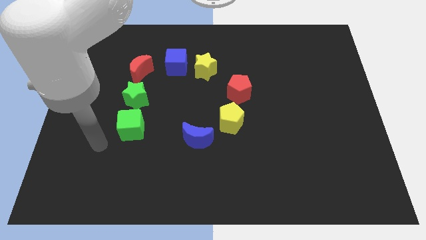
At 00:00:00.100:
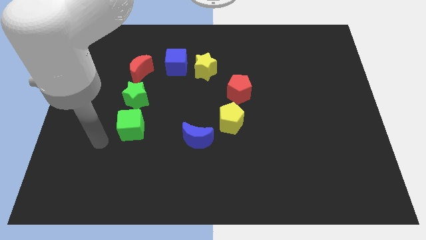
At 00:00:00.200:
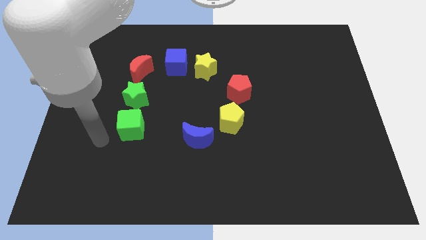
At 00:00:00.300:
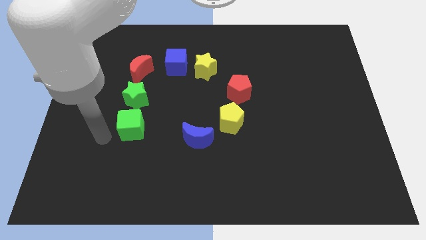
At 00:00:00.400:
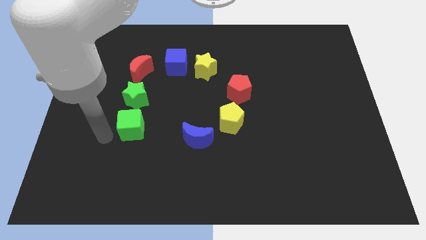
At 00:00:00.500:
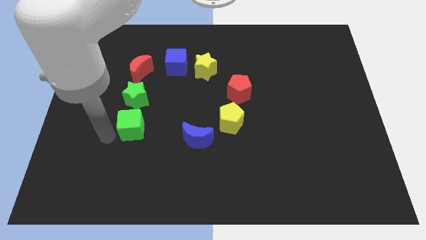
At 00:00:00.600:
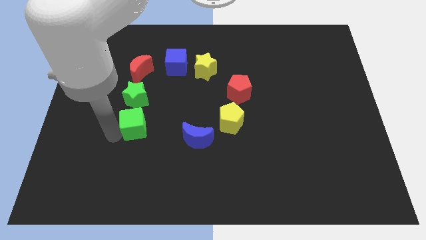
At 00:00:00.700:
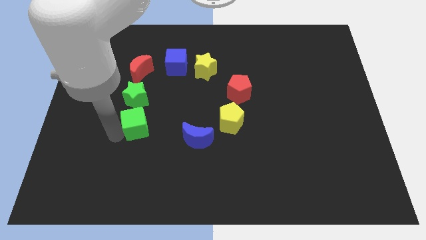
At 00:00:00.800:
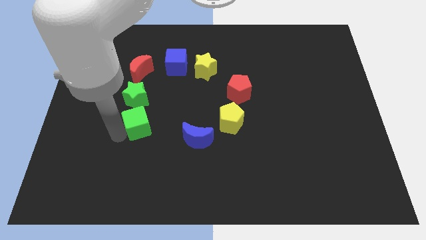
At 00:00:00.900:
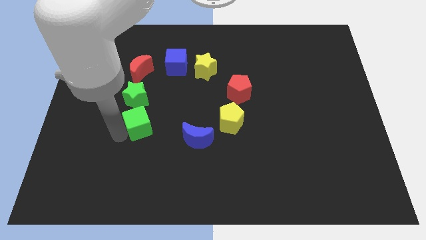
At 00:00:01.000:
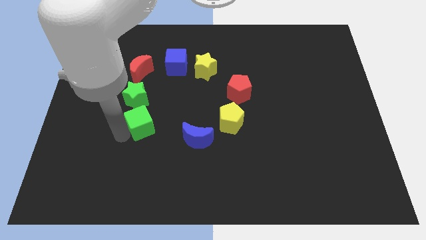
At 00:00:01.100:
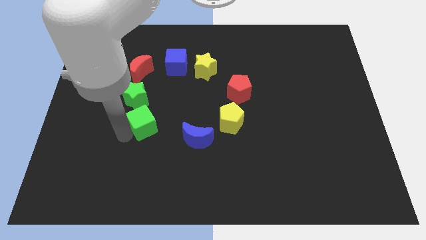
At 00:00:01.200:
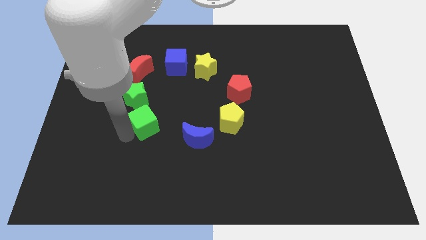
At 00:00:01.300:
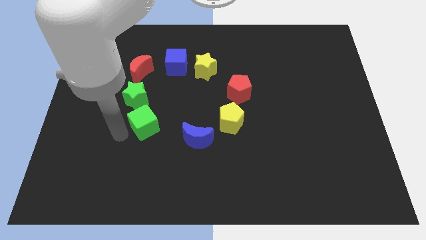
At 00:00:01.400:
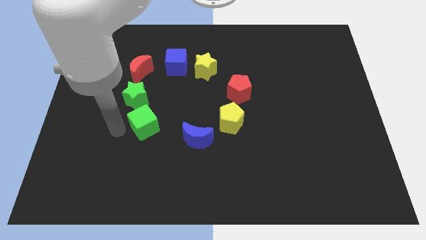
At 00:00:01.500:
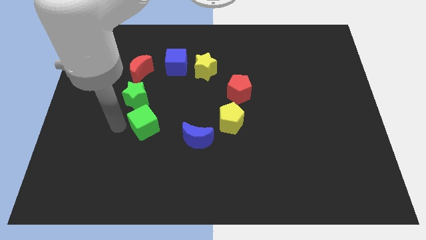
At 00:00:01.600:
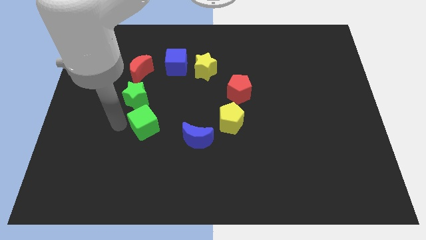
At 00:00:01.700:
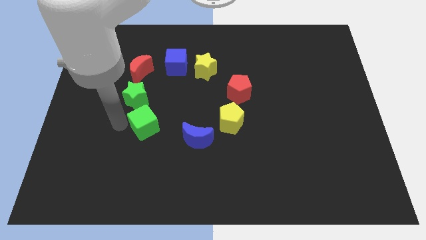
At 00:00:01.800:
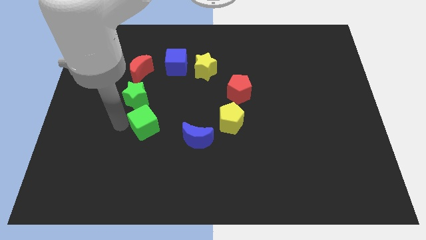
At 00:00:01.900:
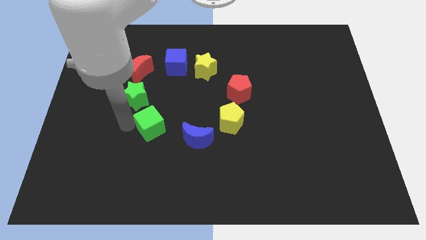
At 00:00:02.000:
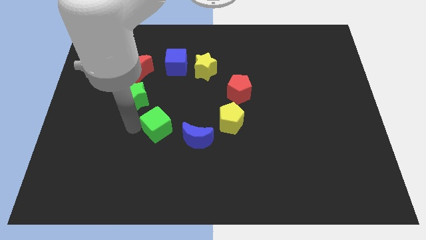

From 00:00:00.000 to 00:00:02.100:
make all the cubes in the form of circle

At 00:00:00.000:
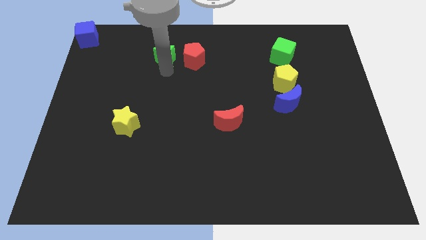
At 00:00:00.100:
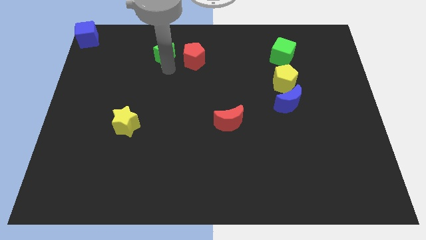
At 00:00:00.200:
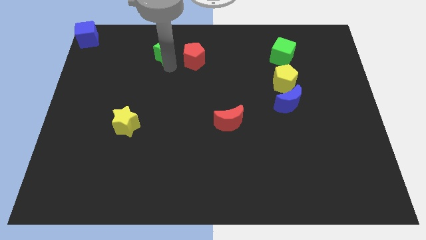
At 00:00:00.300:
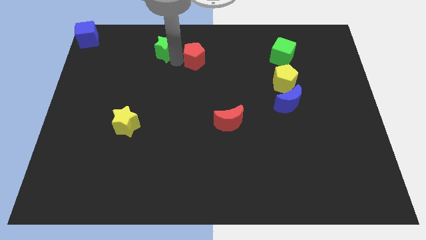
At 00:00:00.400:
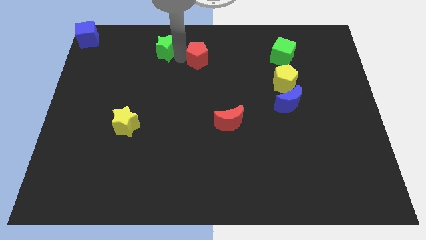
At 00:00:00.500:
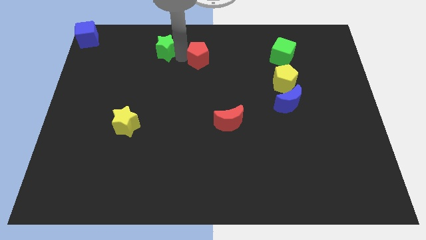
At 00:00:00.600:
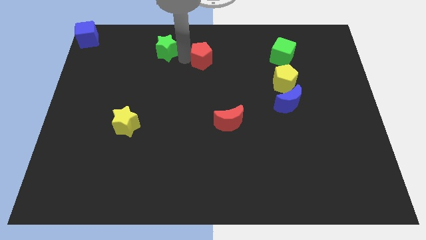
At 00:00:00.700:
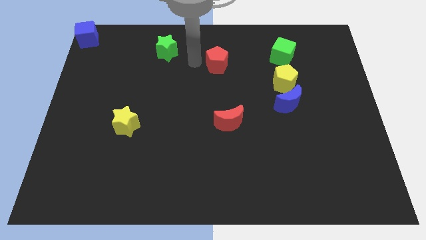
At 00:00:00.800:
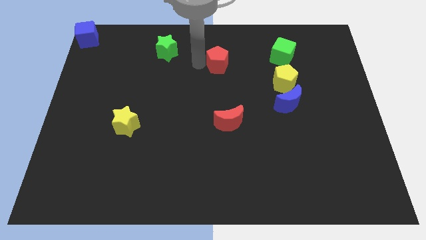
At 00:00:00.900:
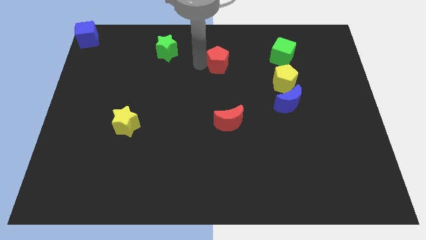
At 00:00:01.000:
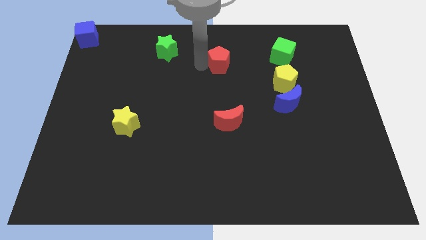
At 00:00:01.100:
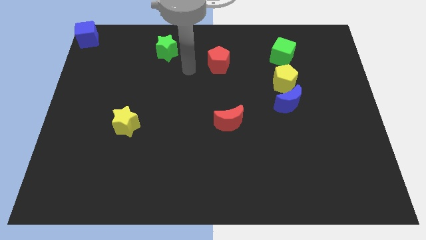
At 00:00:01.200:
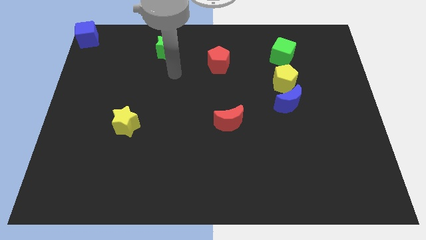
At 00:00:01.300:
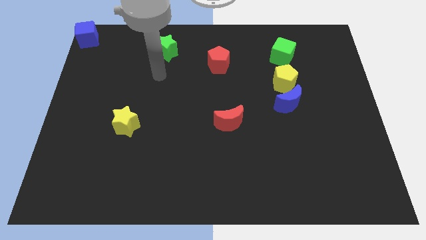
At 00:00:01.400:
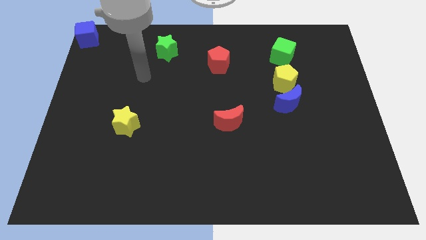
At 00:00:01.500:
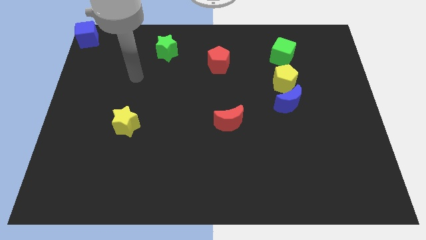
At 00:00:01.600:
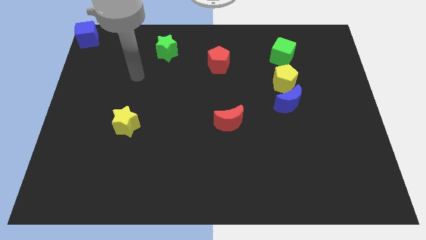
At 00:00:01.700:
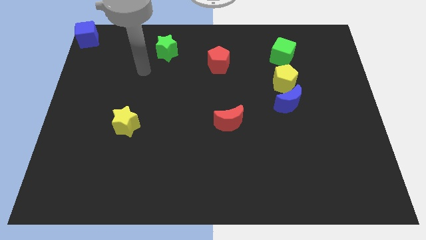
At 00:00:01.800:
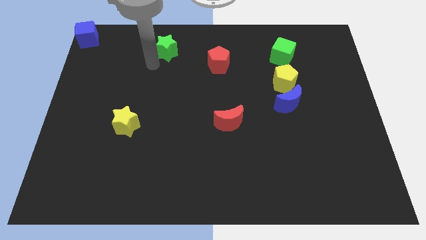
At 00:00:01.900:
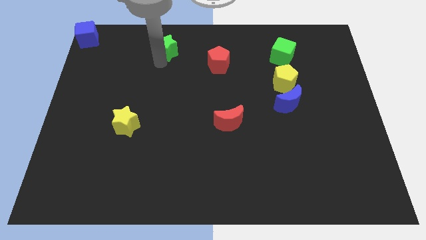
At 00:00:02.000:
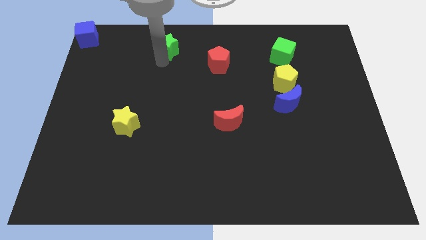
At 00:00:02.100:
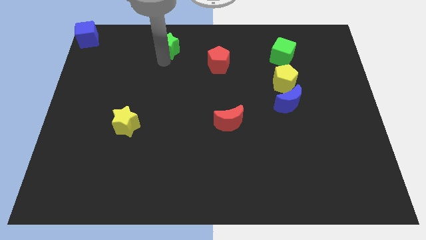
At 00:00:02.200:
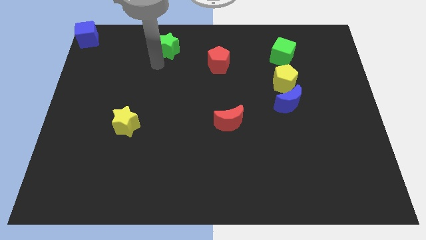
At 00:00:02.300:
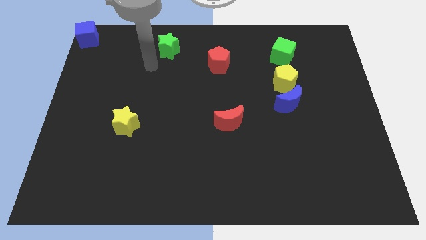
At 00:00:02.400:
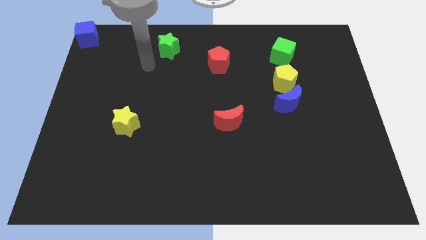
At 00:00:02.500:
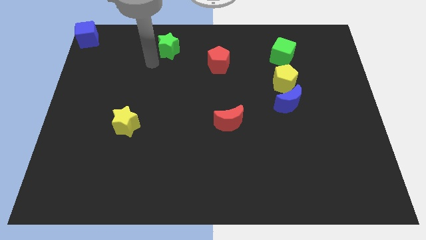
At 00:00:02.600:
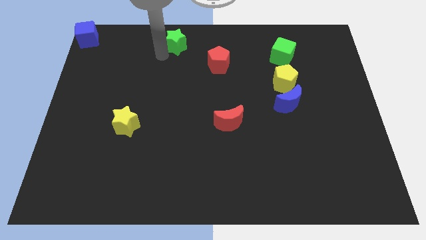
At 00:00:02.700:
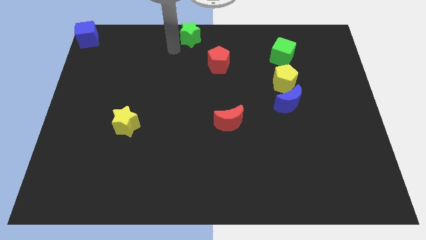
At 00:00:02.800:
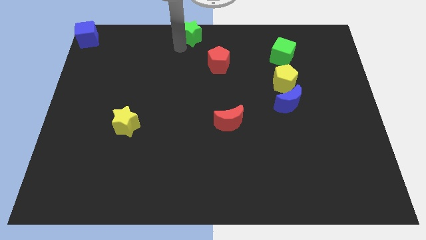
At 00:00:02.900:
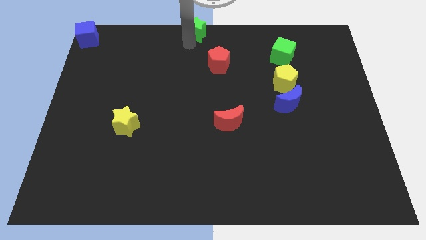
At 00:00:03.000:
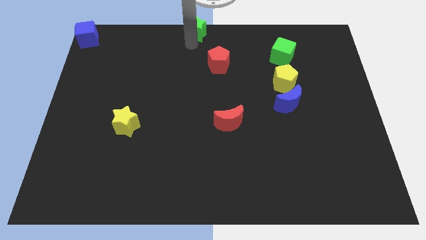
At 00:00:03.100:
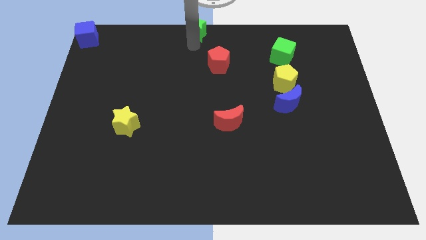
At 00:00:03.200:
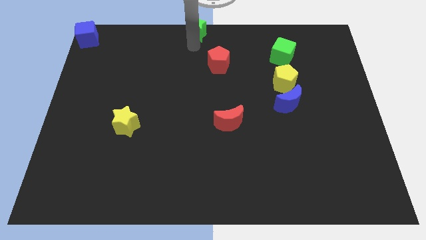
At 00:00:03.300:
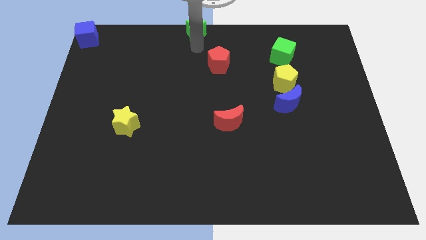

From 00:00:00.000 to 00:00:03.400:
slightly move the red pentagon left to the green cube

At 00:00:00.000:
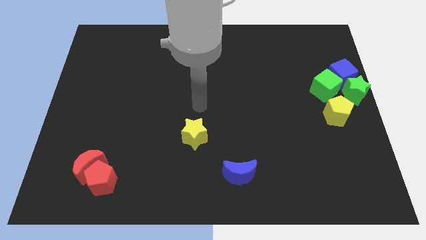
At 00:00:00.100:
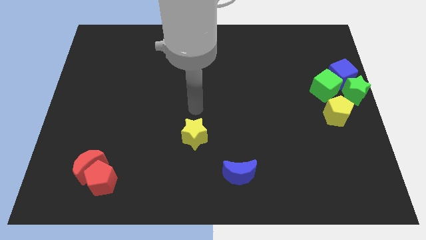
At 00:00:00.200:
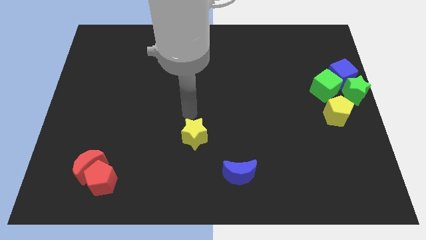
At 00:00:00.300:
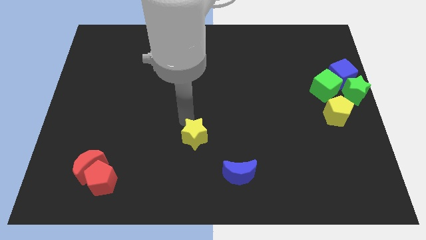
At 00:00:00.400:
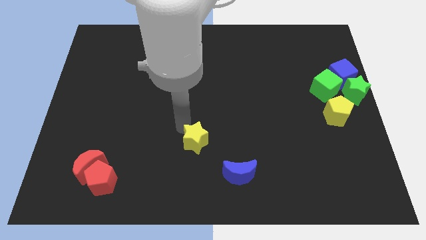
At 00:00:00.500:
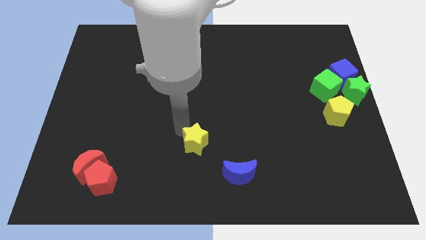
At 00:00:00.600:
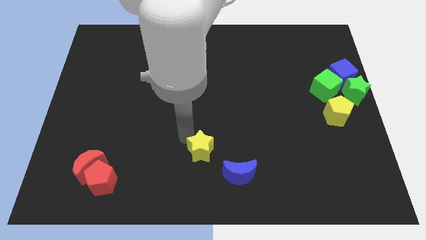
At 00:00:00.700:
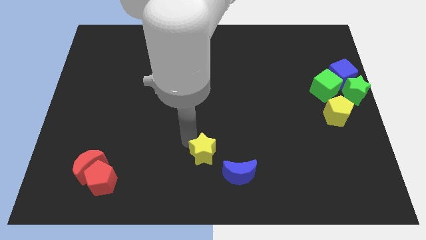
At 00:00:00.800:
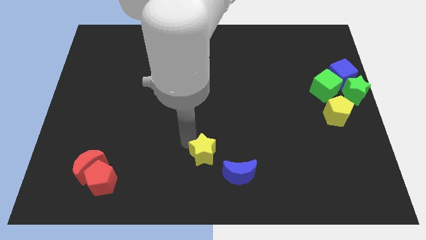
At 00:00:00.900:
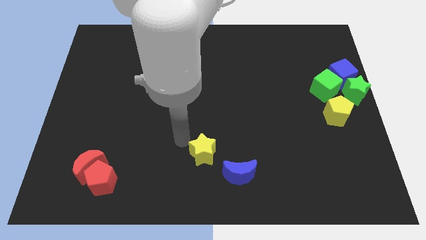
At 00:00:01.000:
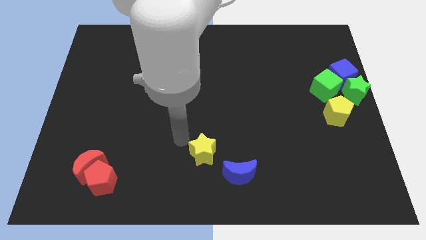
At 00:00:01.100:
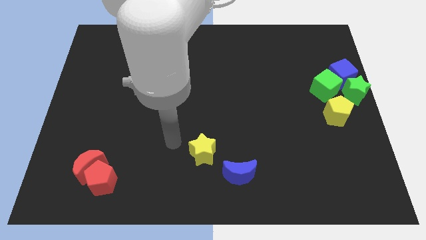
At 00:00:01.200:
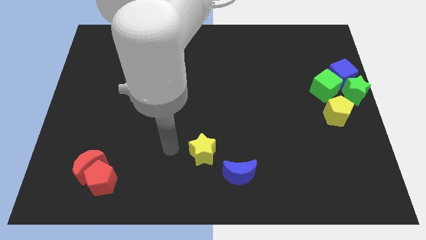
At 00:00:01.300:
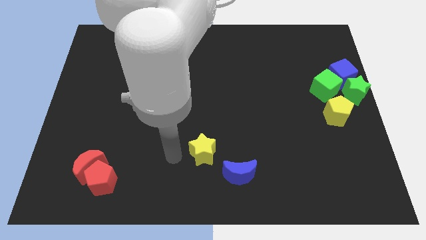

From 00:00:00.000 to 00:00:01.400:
place the yellow star in between the pentagons

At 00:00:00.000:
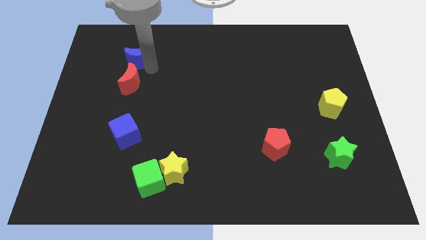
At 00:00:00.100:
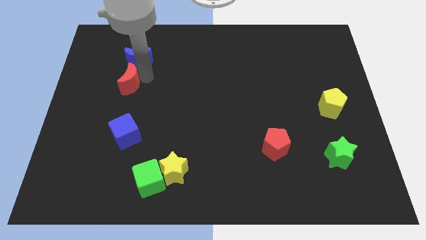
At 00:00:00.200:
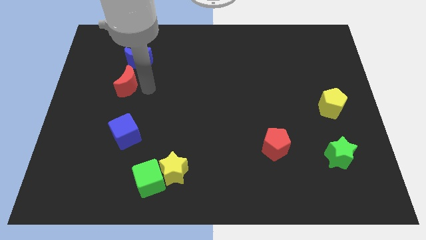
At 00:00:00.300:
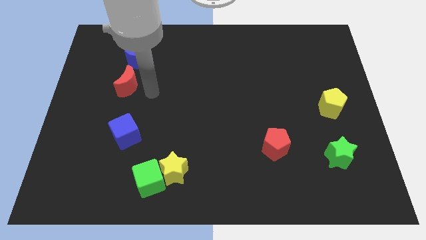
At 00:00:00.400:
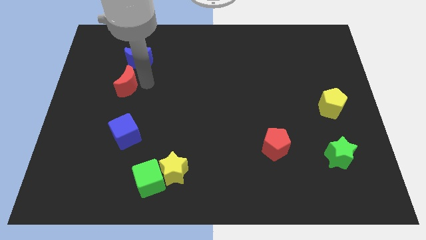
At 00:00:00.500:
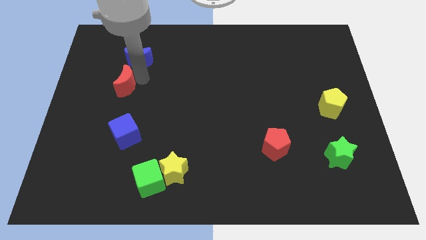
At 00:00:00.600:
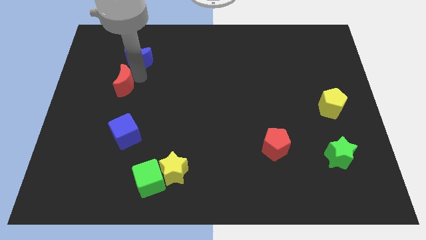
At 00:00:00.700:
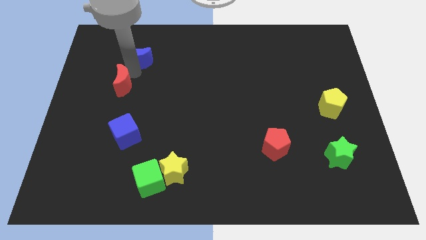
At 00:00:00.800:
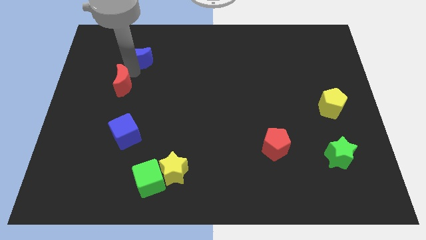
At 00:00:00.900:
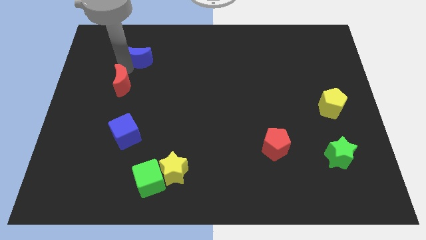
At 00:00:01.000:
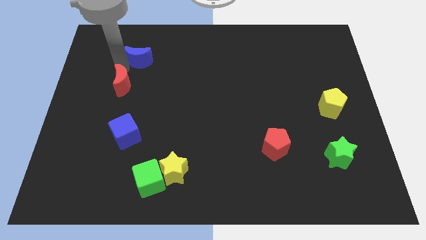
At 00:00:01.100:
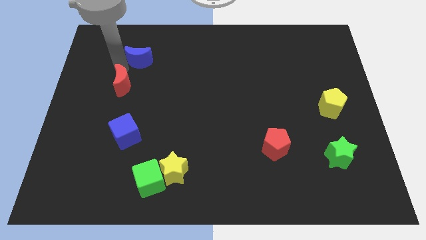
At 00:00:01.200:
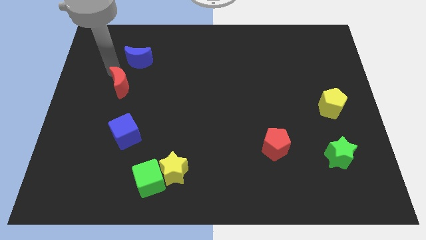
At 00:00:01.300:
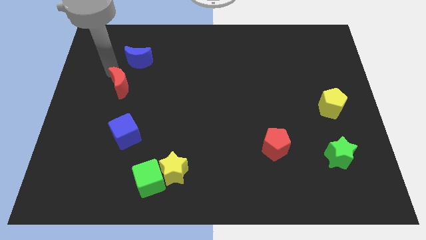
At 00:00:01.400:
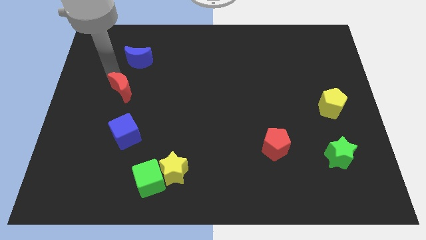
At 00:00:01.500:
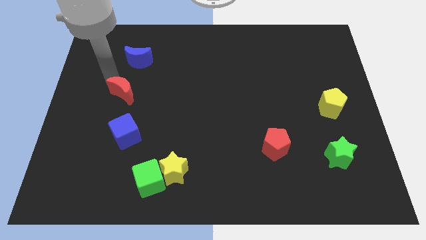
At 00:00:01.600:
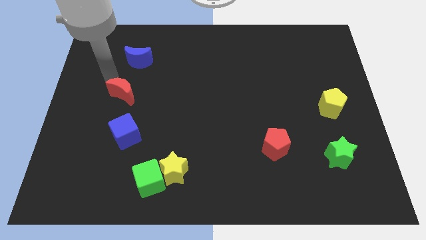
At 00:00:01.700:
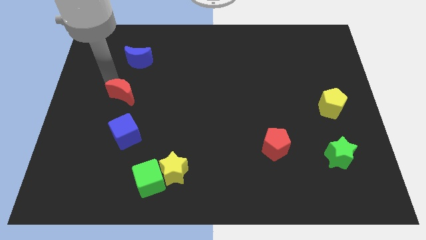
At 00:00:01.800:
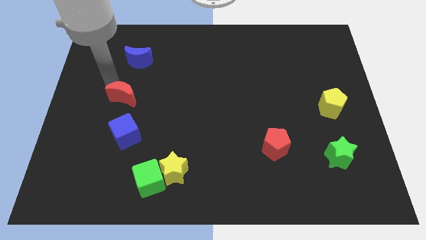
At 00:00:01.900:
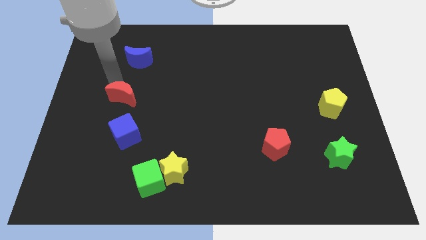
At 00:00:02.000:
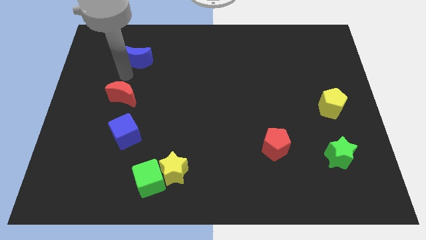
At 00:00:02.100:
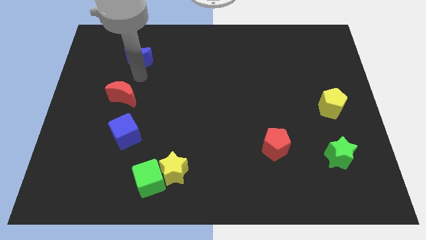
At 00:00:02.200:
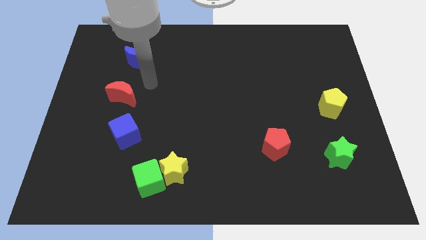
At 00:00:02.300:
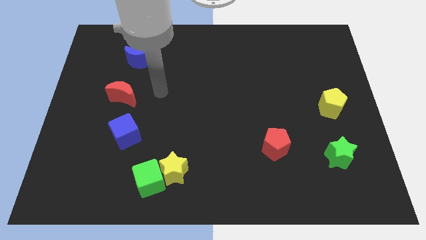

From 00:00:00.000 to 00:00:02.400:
move the red crescent to the top of the blue cube
